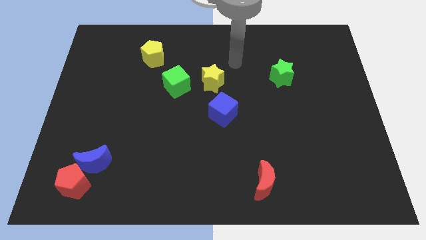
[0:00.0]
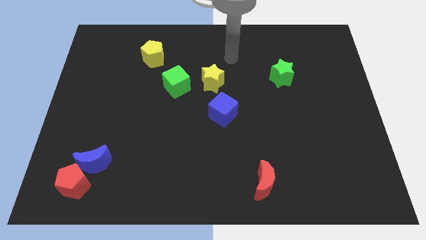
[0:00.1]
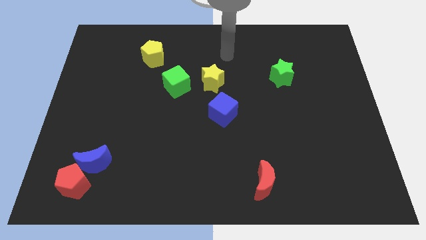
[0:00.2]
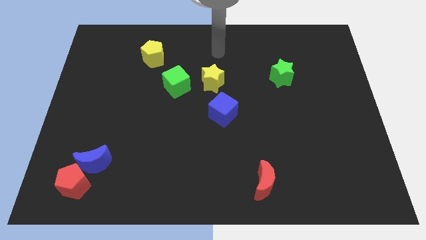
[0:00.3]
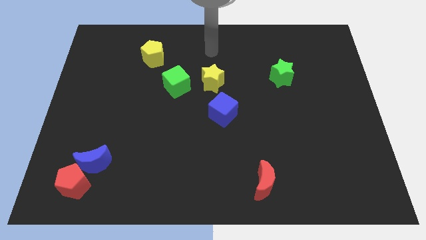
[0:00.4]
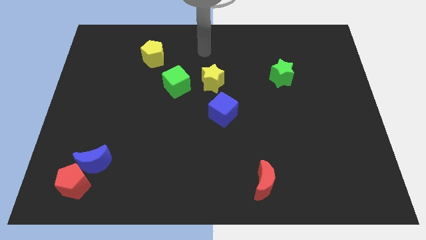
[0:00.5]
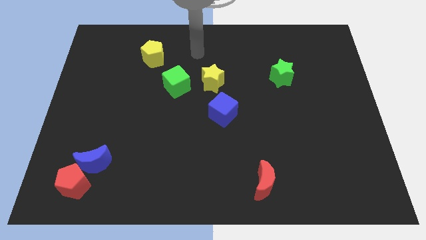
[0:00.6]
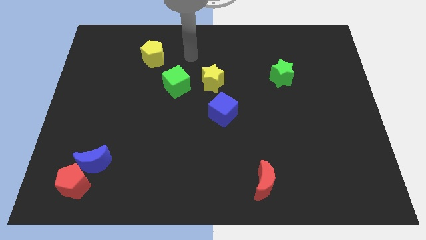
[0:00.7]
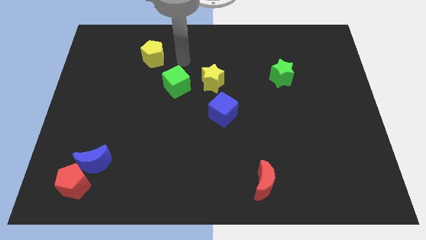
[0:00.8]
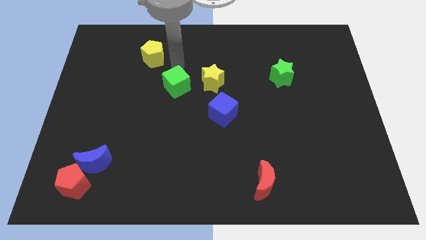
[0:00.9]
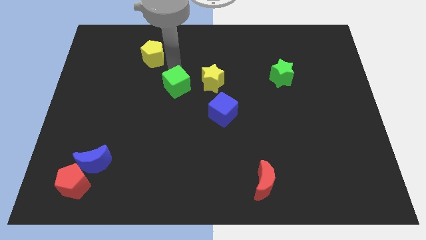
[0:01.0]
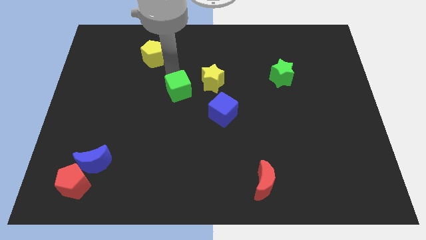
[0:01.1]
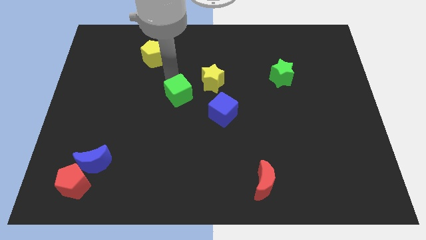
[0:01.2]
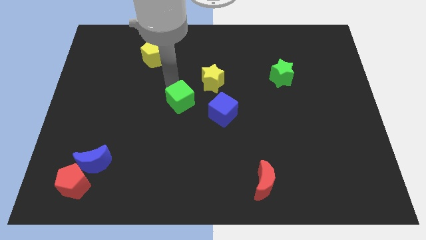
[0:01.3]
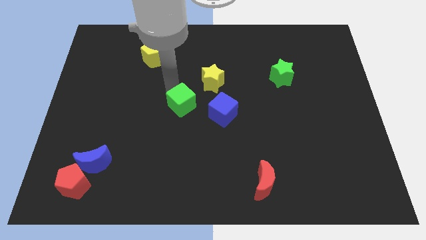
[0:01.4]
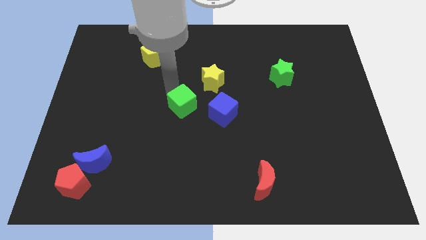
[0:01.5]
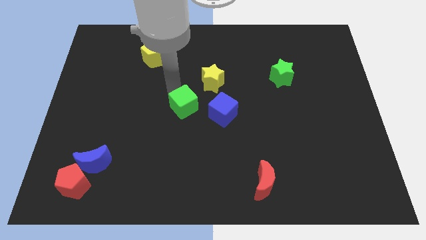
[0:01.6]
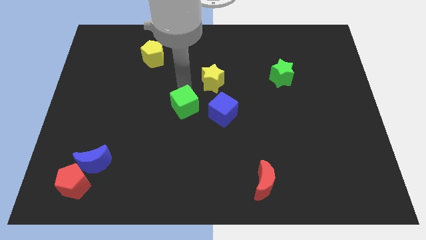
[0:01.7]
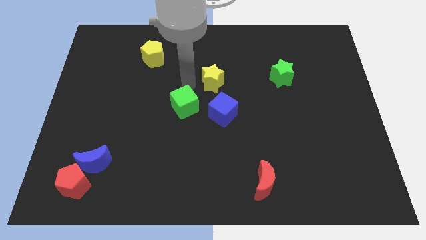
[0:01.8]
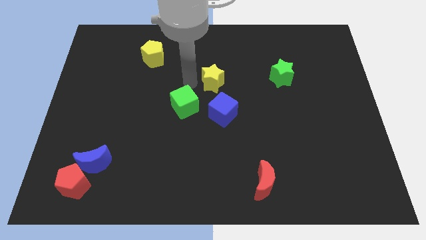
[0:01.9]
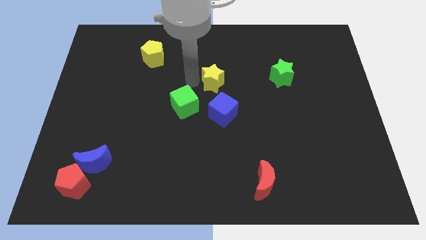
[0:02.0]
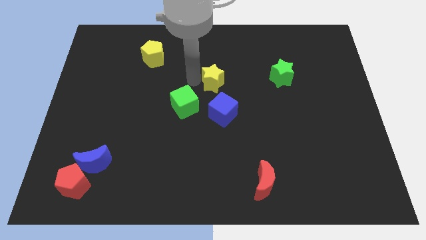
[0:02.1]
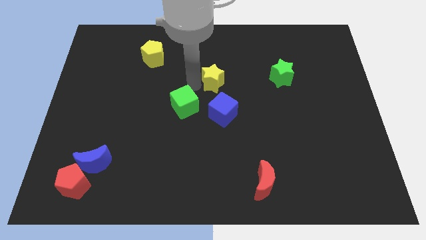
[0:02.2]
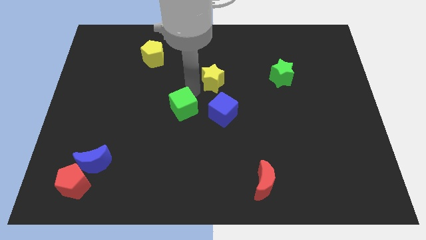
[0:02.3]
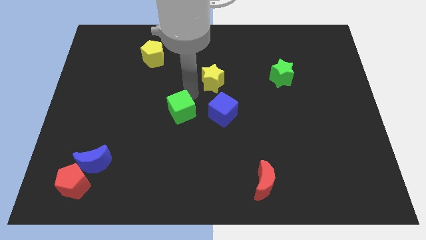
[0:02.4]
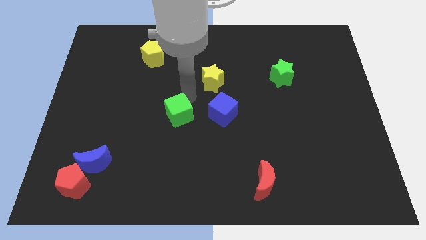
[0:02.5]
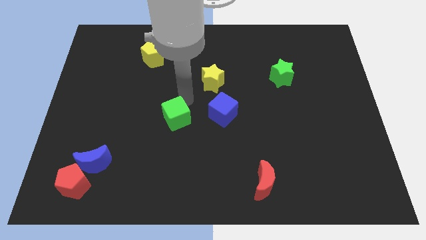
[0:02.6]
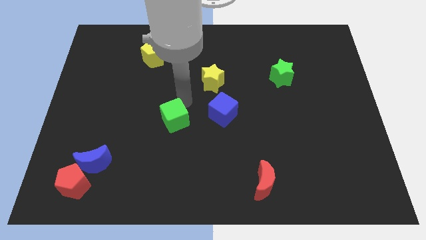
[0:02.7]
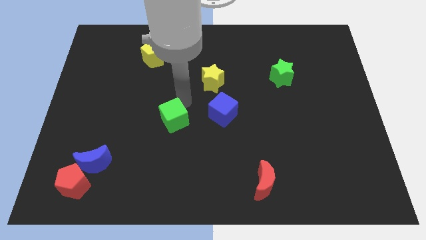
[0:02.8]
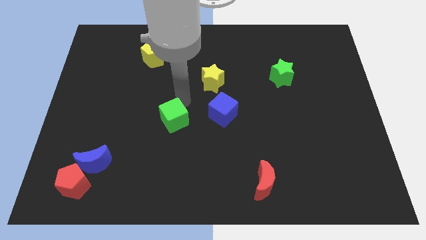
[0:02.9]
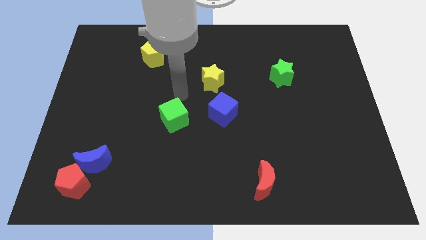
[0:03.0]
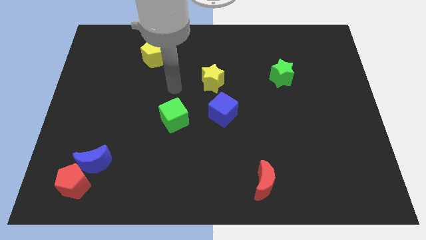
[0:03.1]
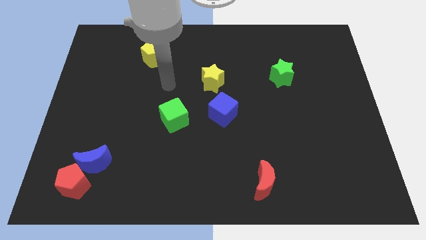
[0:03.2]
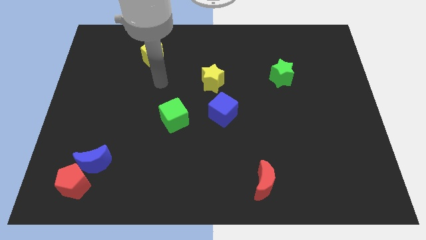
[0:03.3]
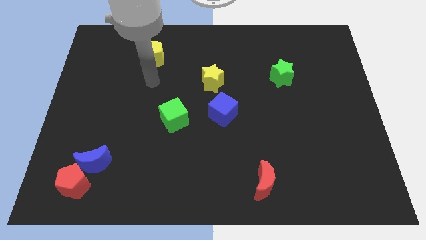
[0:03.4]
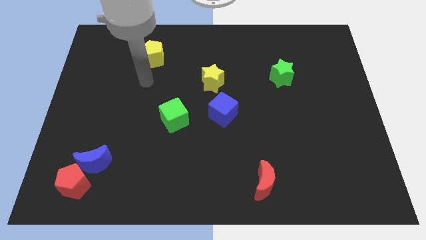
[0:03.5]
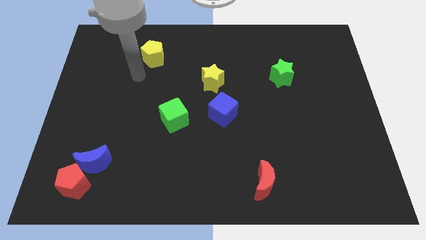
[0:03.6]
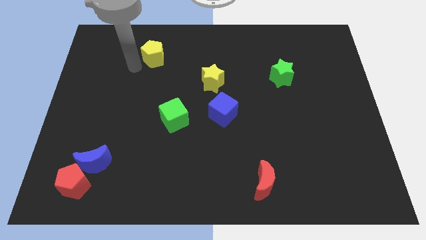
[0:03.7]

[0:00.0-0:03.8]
move the green cube to the left side of the board

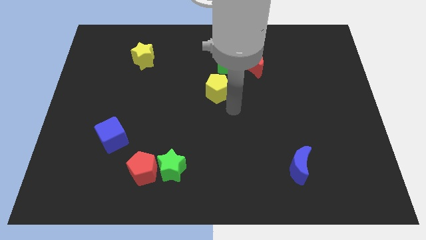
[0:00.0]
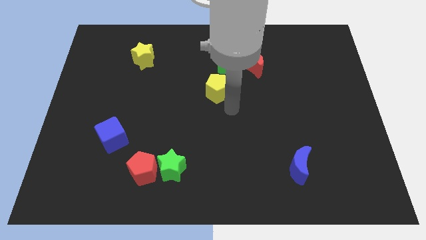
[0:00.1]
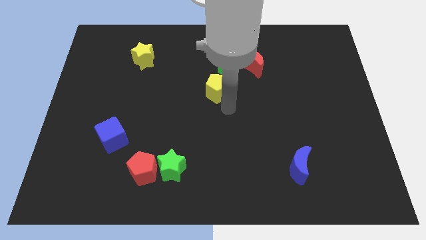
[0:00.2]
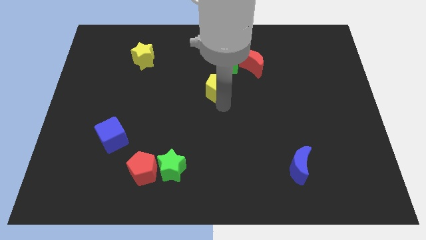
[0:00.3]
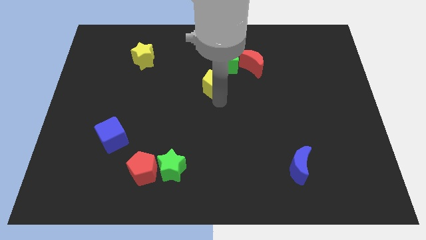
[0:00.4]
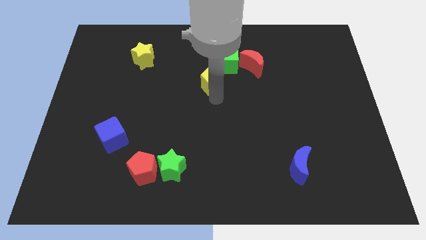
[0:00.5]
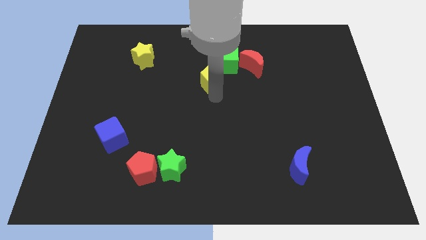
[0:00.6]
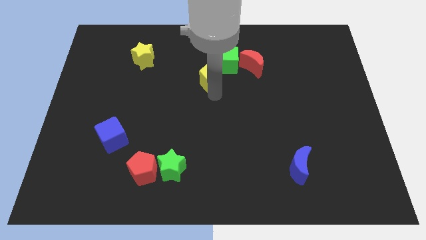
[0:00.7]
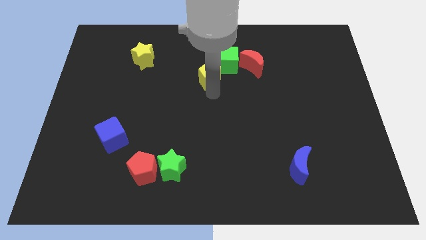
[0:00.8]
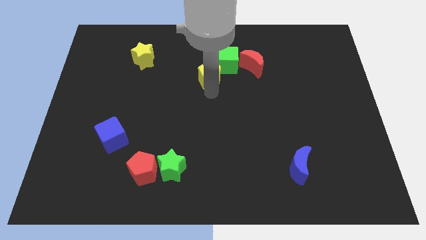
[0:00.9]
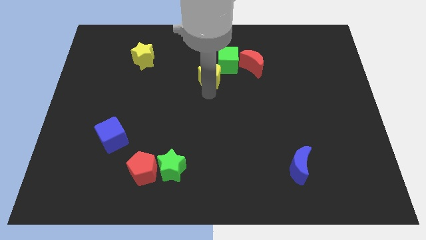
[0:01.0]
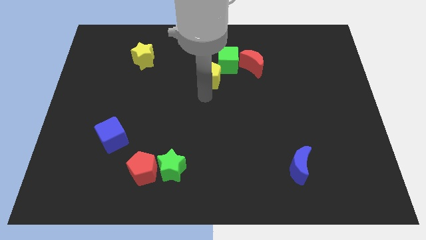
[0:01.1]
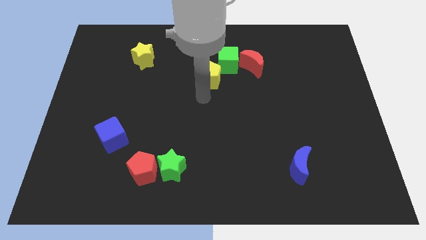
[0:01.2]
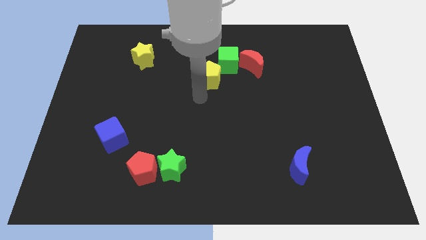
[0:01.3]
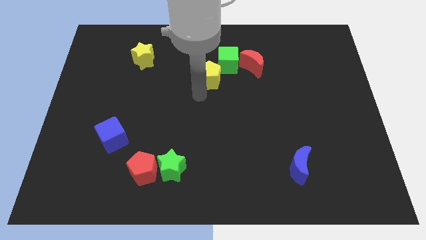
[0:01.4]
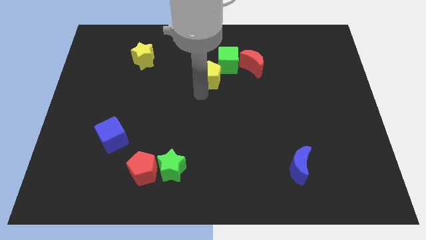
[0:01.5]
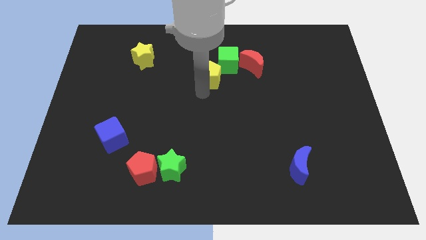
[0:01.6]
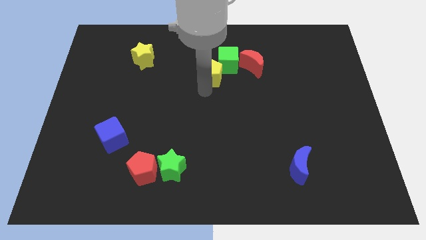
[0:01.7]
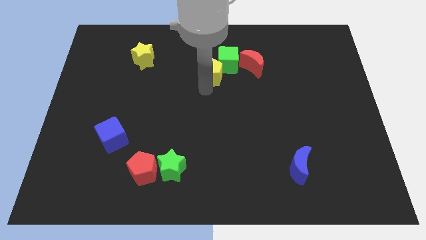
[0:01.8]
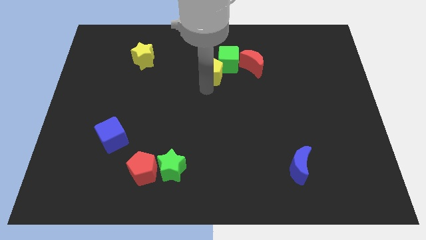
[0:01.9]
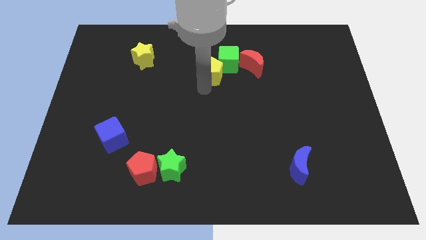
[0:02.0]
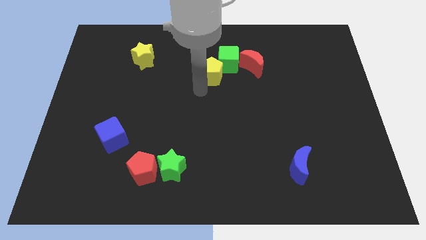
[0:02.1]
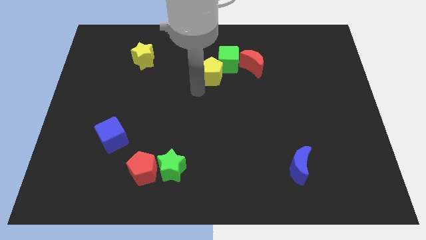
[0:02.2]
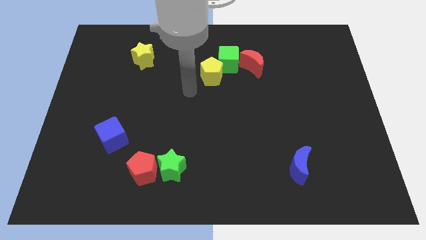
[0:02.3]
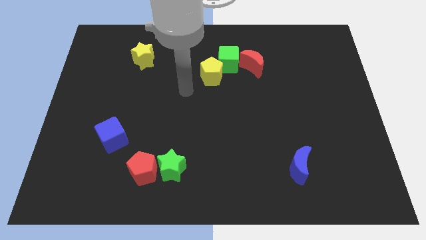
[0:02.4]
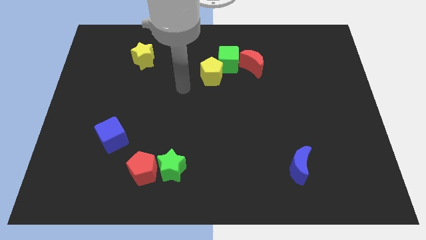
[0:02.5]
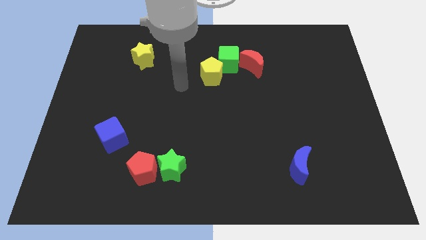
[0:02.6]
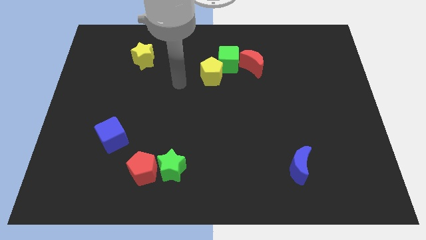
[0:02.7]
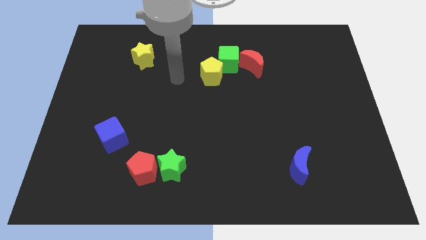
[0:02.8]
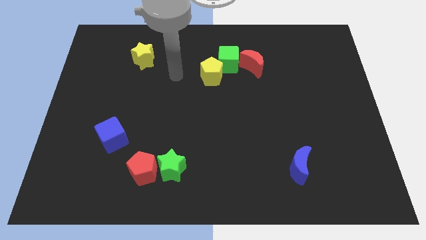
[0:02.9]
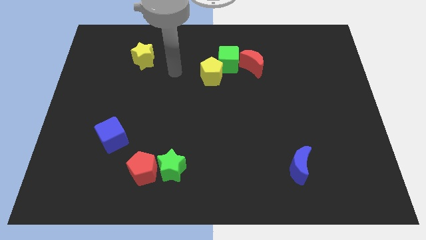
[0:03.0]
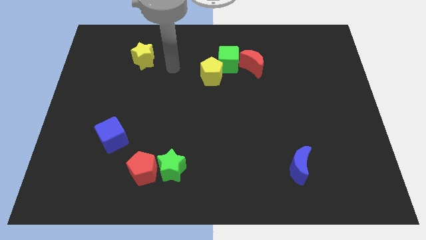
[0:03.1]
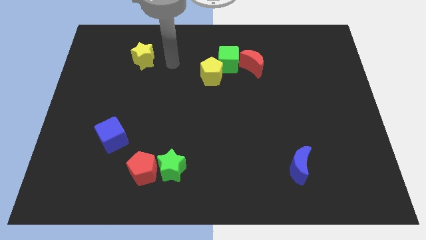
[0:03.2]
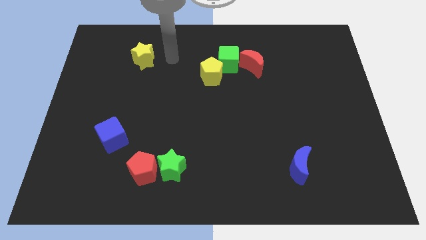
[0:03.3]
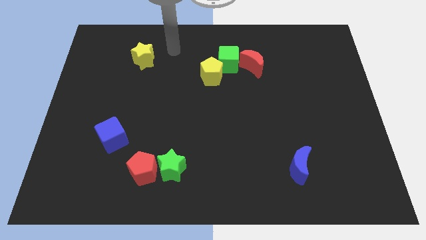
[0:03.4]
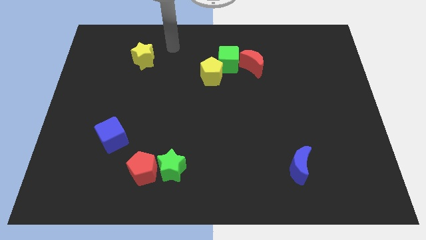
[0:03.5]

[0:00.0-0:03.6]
make the yellow pentagon touch the bottom left of the green cube

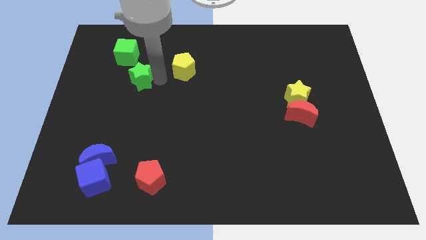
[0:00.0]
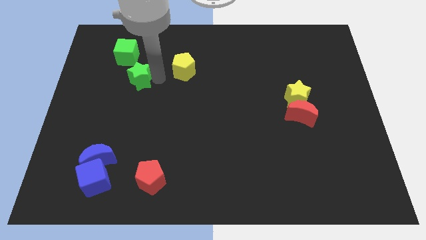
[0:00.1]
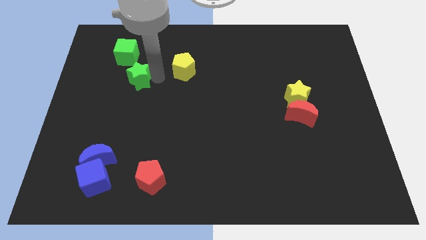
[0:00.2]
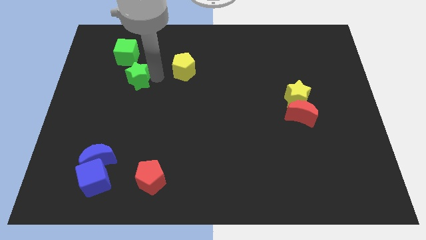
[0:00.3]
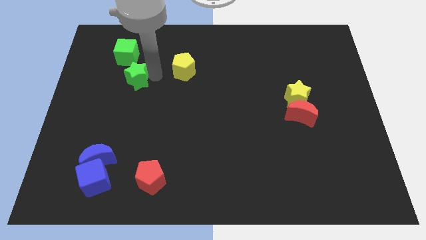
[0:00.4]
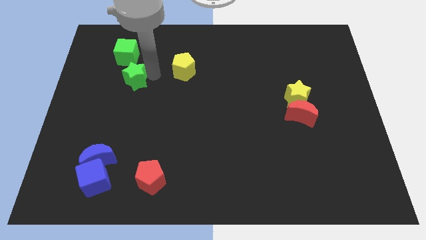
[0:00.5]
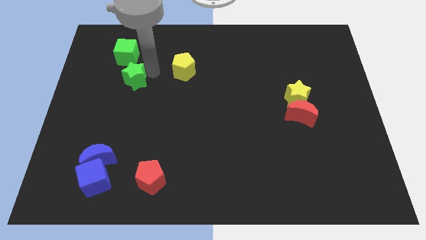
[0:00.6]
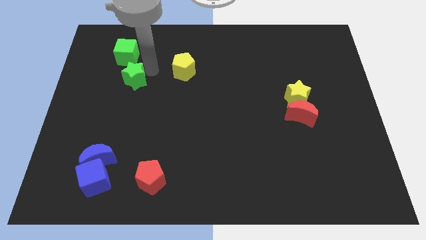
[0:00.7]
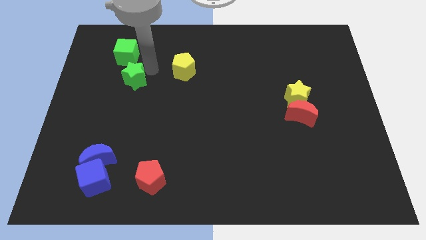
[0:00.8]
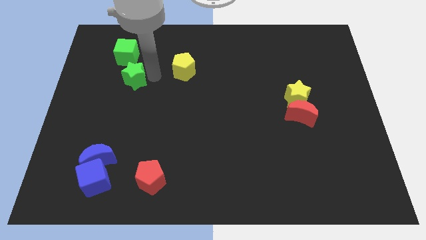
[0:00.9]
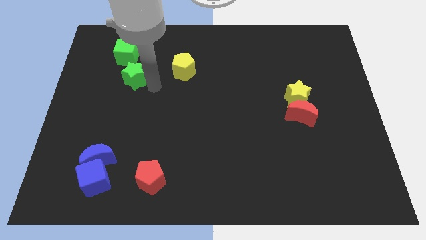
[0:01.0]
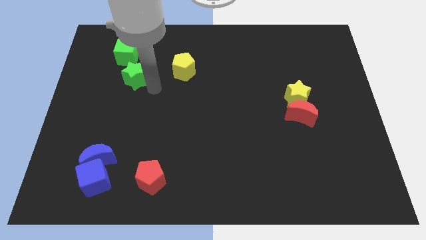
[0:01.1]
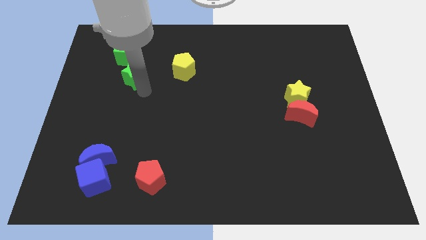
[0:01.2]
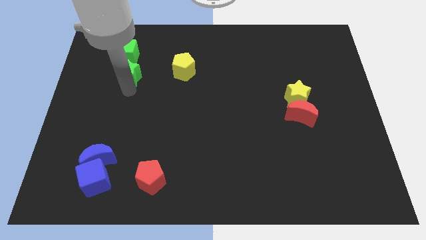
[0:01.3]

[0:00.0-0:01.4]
put the green star vertically below the green cube
